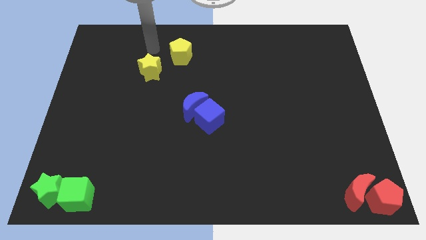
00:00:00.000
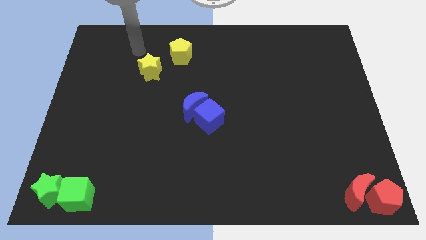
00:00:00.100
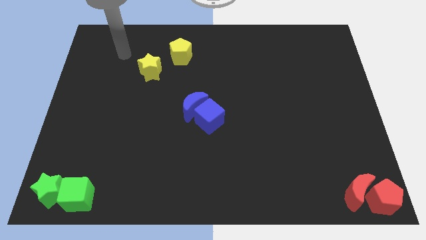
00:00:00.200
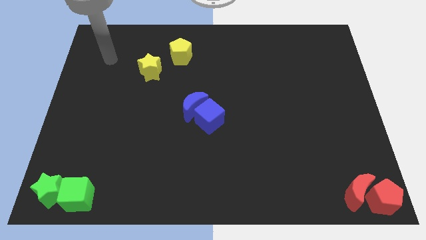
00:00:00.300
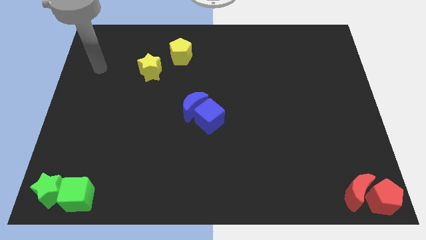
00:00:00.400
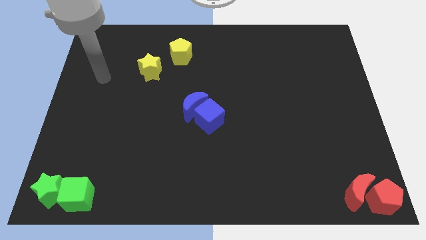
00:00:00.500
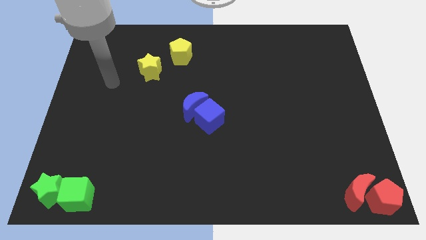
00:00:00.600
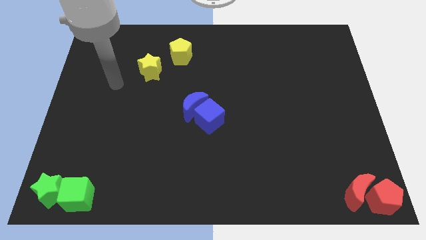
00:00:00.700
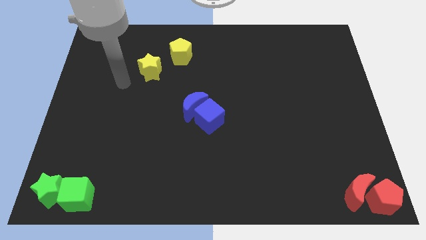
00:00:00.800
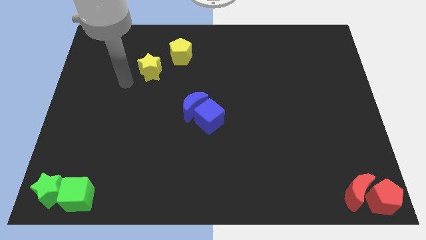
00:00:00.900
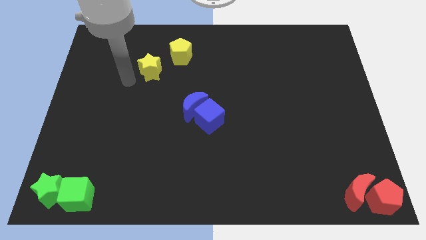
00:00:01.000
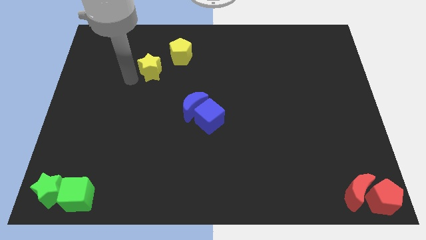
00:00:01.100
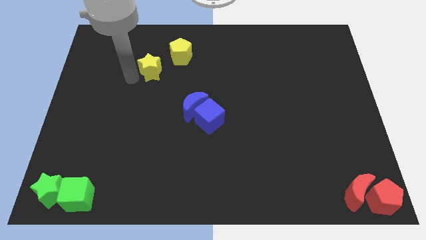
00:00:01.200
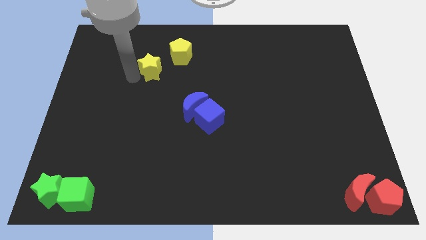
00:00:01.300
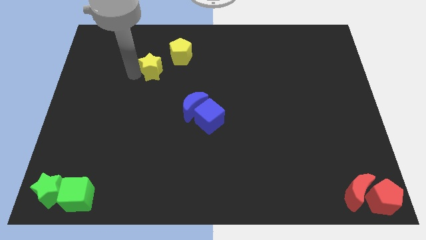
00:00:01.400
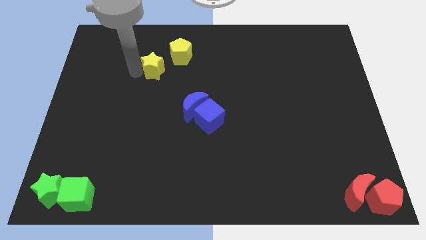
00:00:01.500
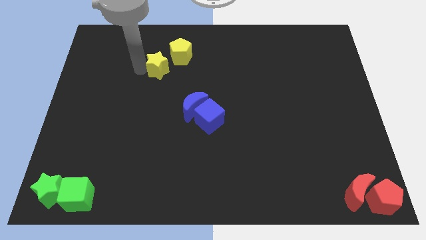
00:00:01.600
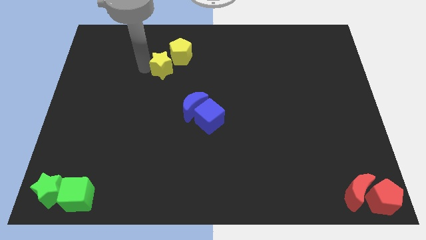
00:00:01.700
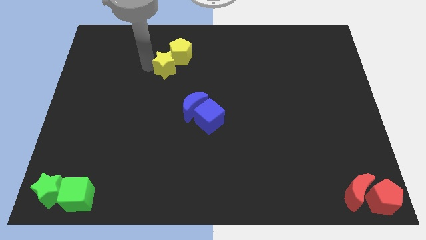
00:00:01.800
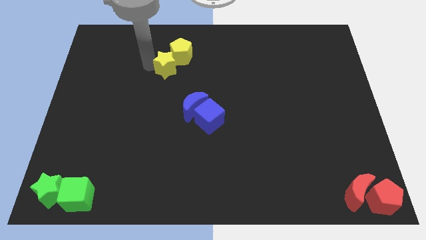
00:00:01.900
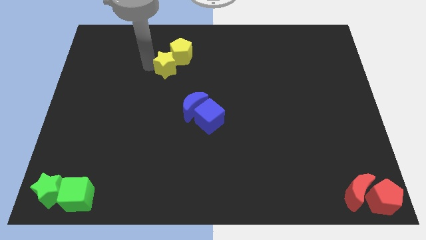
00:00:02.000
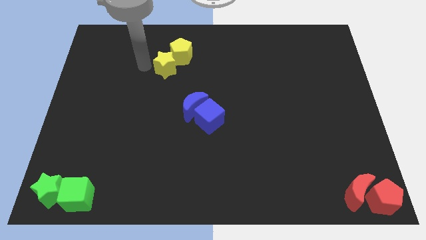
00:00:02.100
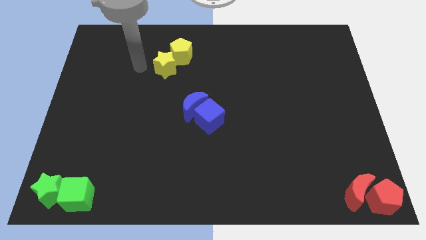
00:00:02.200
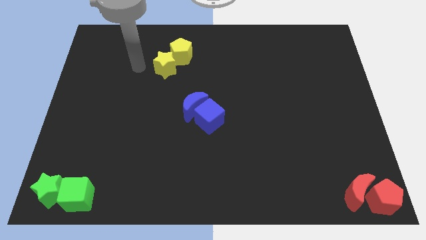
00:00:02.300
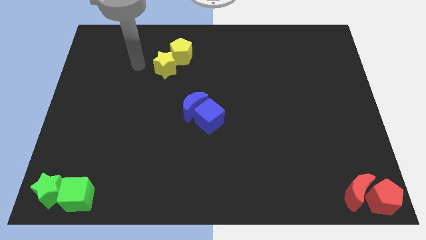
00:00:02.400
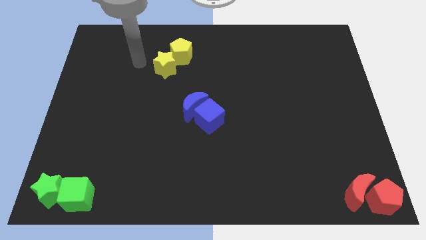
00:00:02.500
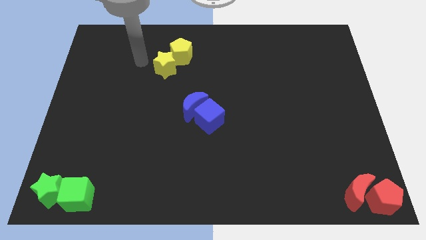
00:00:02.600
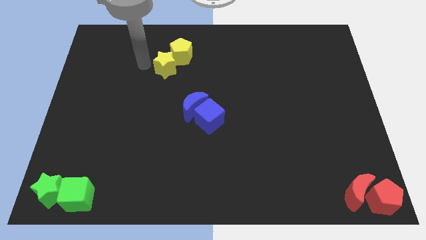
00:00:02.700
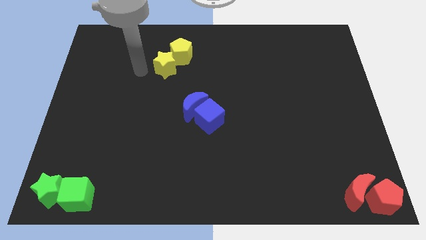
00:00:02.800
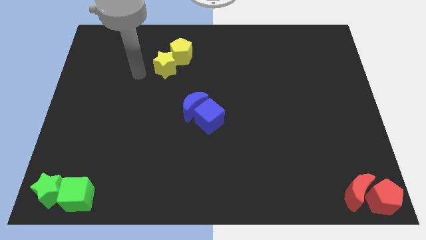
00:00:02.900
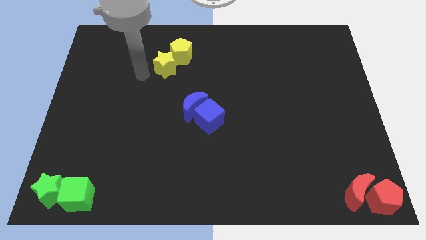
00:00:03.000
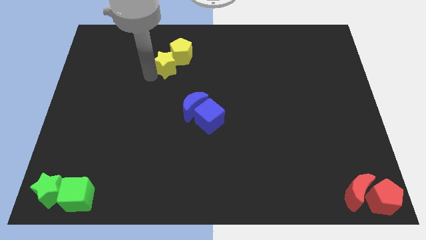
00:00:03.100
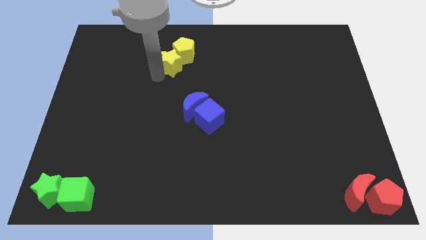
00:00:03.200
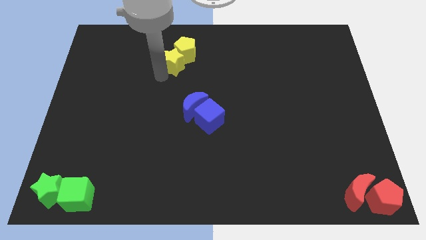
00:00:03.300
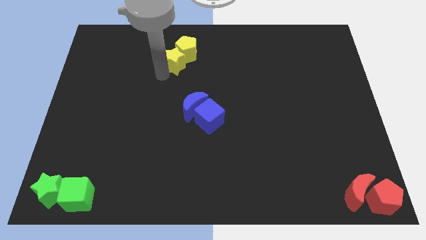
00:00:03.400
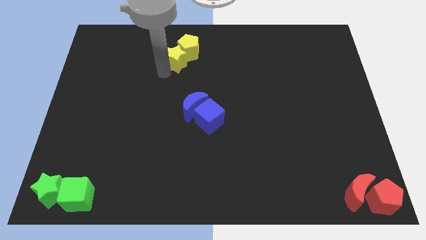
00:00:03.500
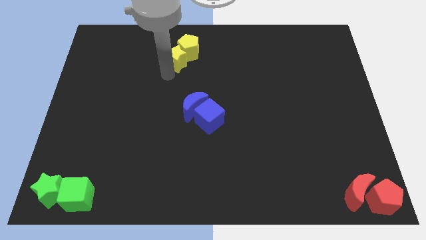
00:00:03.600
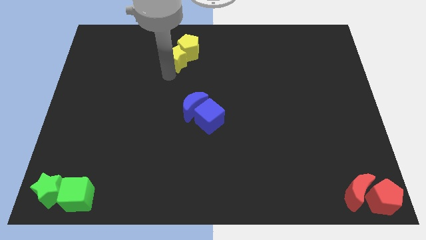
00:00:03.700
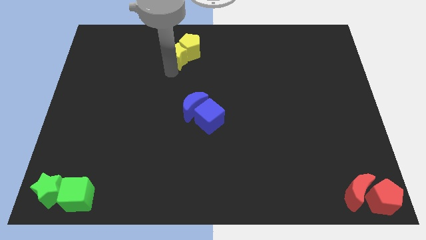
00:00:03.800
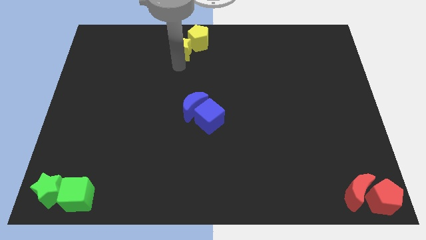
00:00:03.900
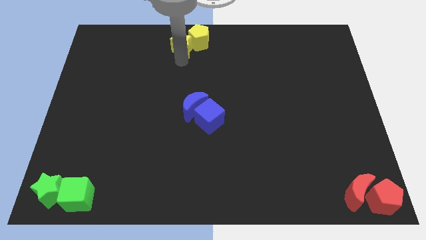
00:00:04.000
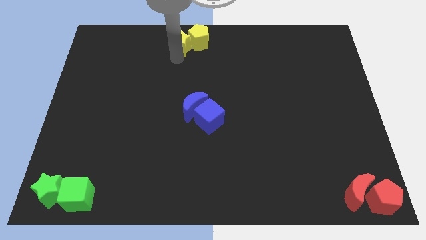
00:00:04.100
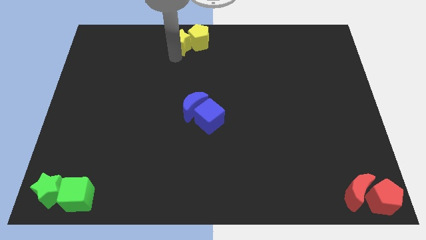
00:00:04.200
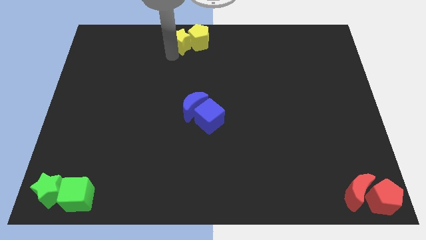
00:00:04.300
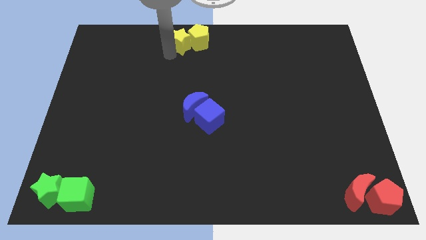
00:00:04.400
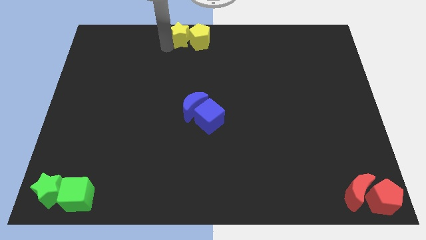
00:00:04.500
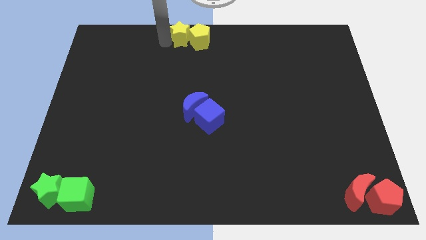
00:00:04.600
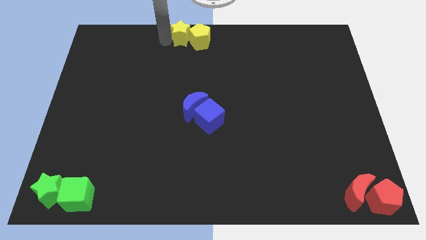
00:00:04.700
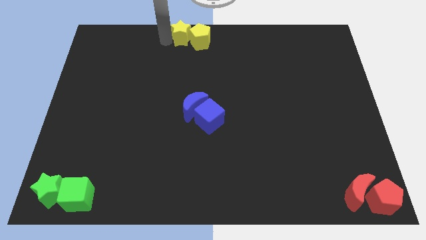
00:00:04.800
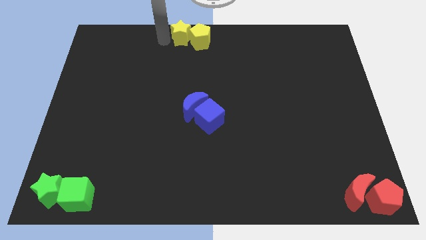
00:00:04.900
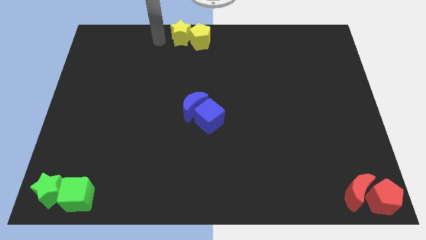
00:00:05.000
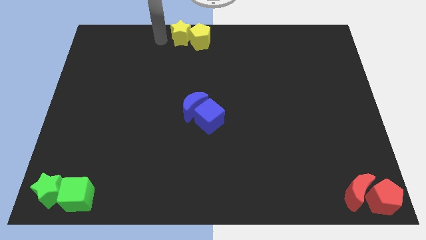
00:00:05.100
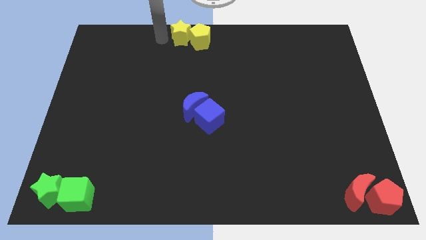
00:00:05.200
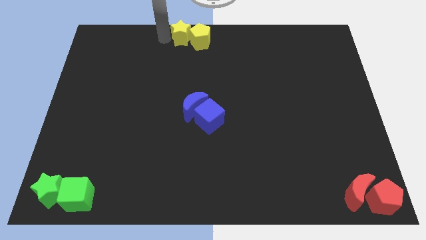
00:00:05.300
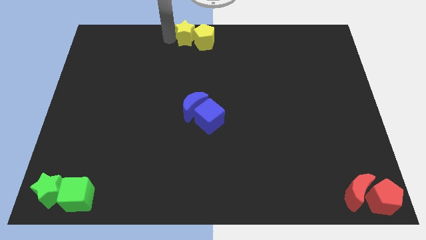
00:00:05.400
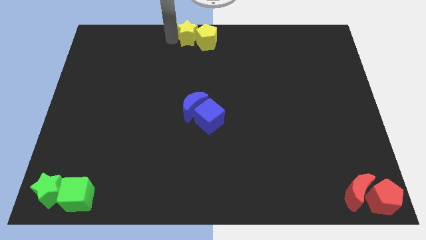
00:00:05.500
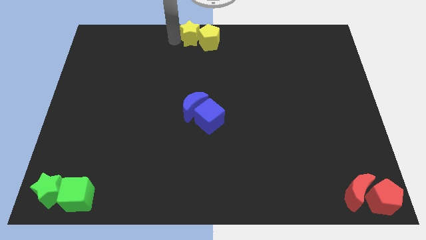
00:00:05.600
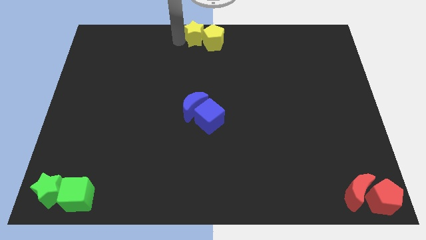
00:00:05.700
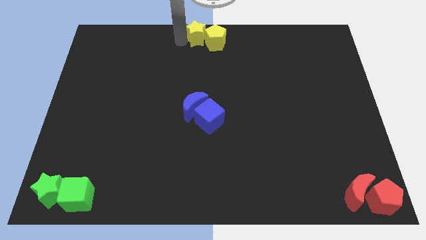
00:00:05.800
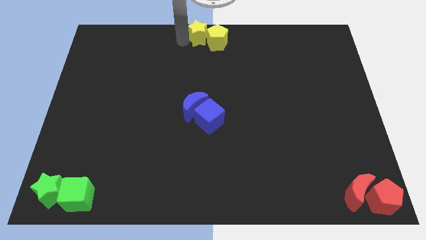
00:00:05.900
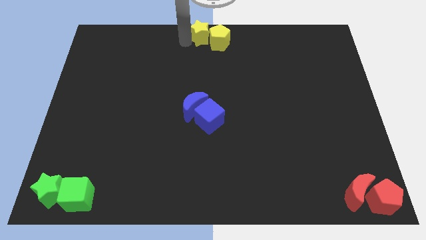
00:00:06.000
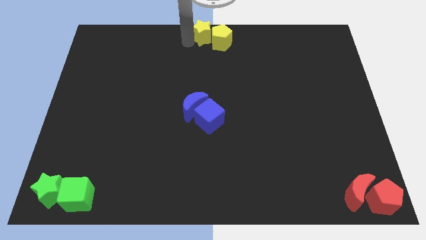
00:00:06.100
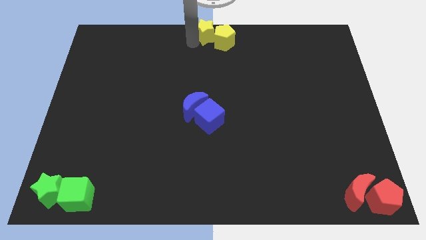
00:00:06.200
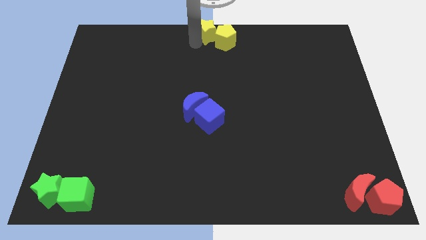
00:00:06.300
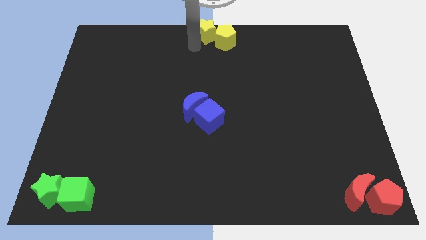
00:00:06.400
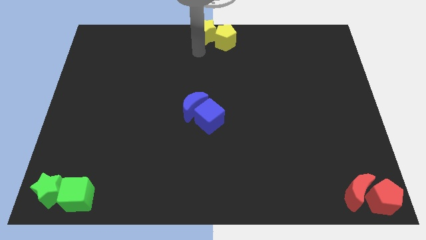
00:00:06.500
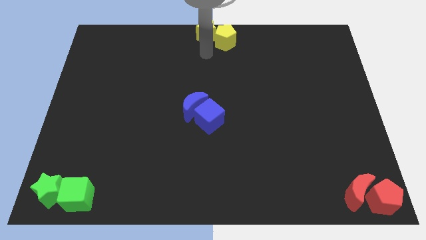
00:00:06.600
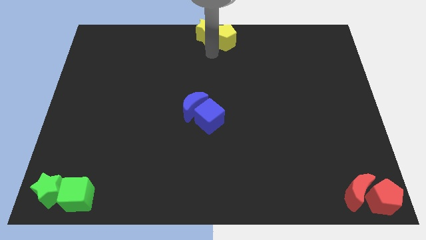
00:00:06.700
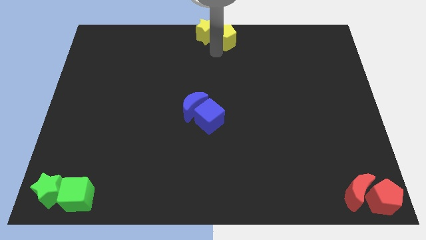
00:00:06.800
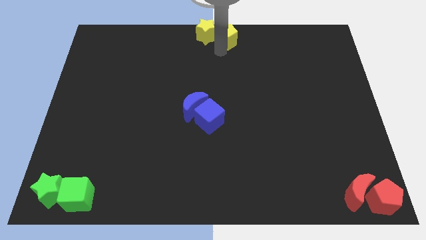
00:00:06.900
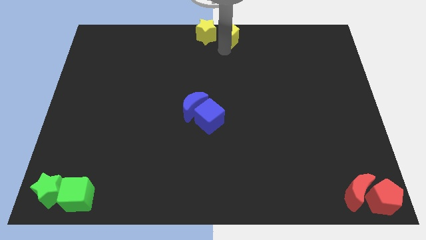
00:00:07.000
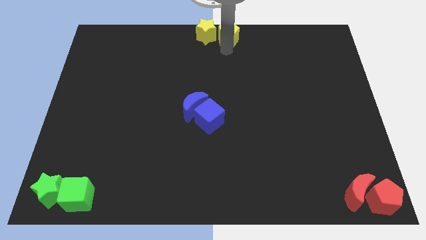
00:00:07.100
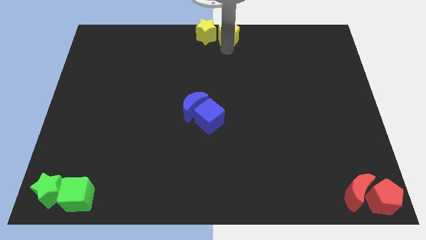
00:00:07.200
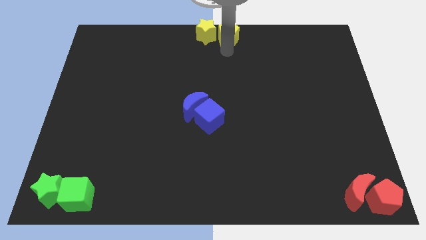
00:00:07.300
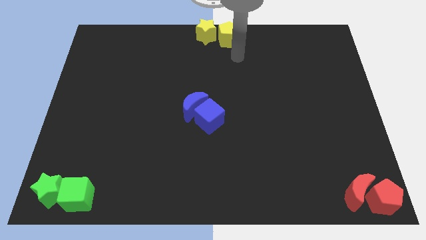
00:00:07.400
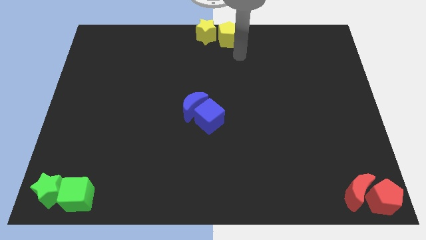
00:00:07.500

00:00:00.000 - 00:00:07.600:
place the yellow blocks at center top

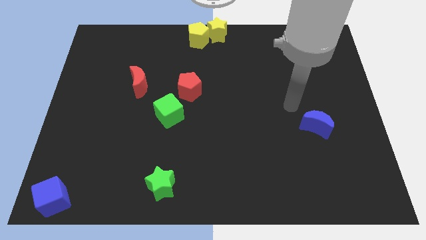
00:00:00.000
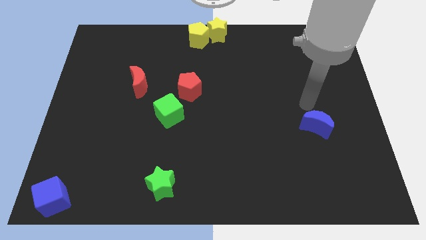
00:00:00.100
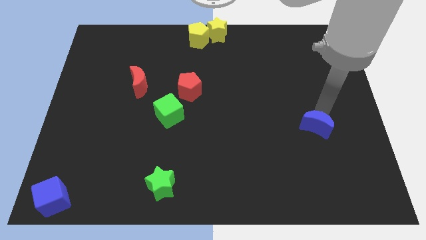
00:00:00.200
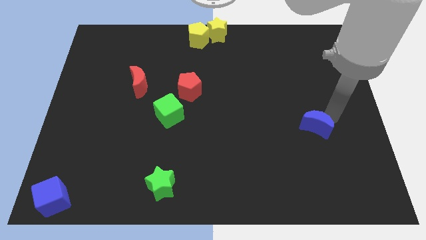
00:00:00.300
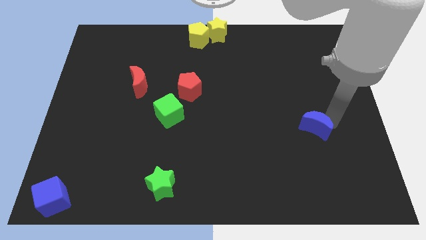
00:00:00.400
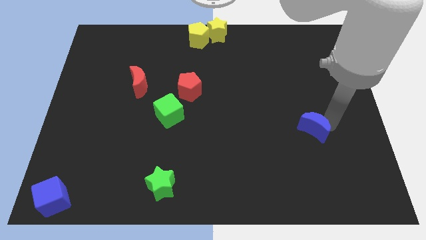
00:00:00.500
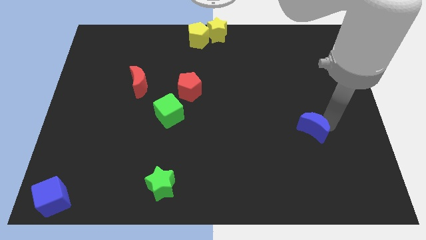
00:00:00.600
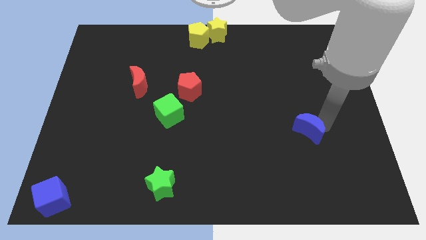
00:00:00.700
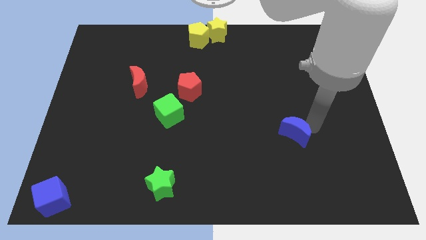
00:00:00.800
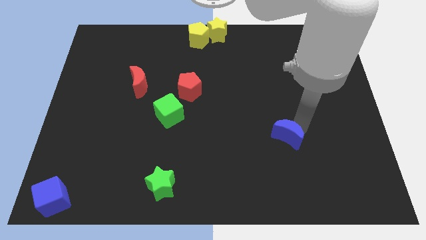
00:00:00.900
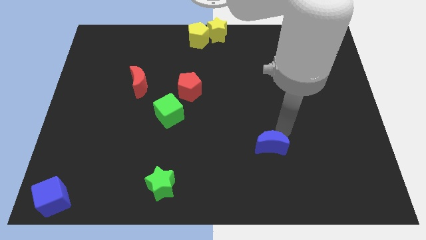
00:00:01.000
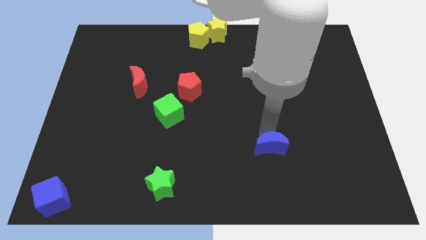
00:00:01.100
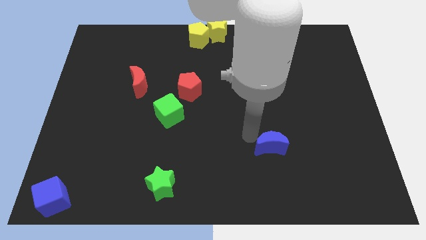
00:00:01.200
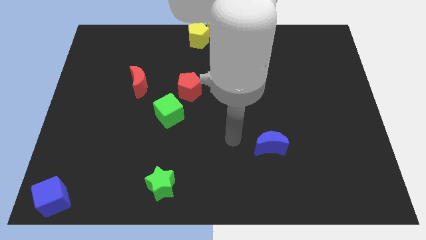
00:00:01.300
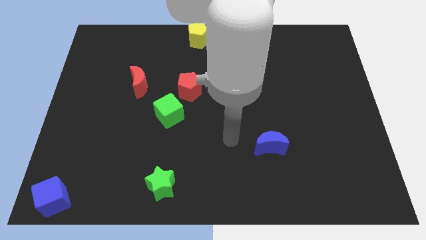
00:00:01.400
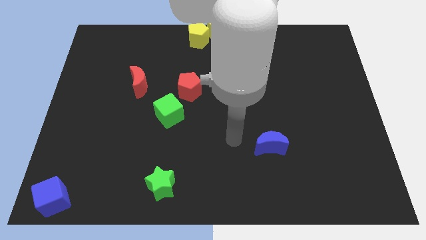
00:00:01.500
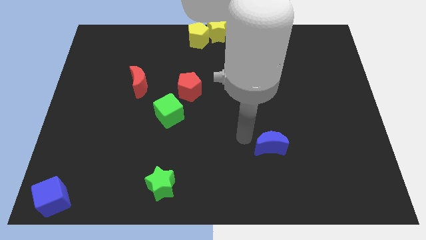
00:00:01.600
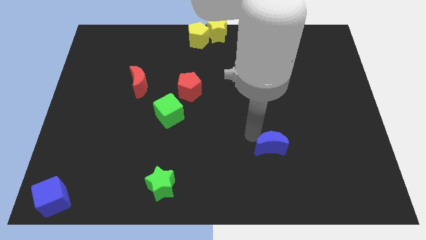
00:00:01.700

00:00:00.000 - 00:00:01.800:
slightly push the blue moon downwards
